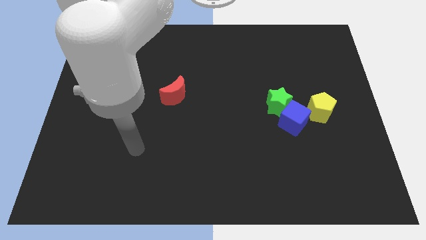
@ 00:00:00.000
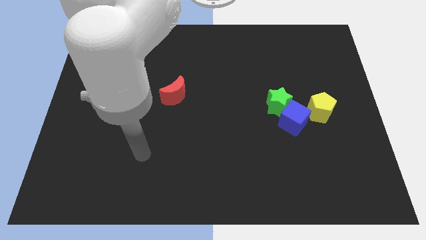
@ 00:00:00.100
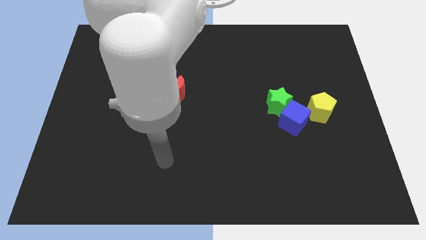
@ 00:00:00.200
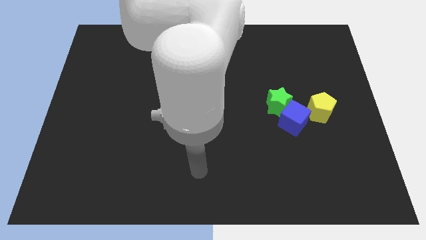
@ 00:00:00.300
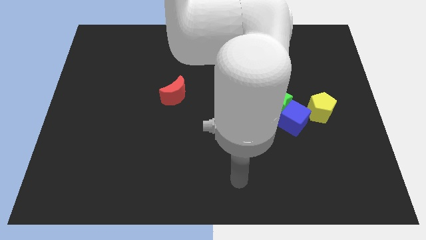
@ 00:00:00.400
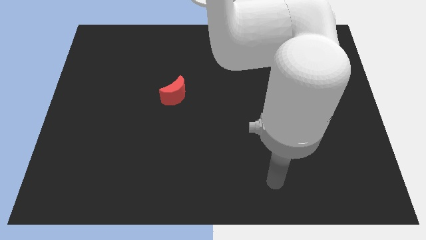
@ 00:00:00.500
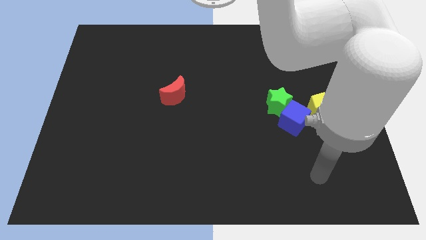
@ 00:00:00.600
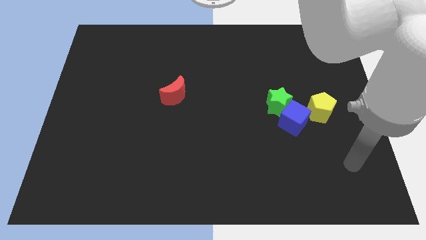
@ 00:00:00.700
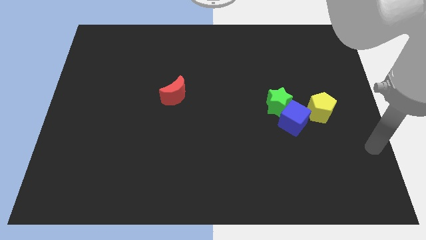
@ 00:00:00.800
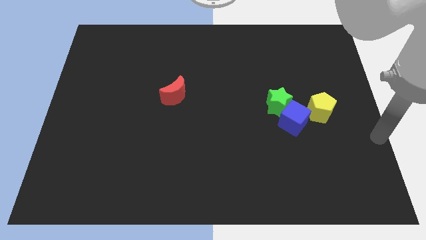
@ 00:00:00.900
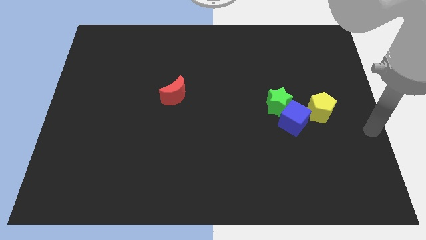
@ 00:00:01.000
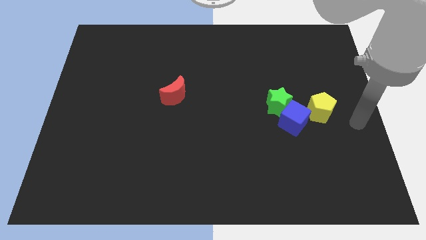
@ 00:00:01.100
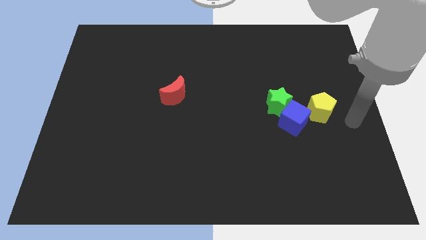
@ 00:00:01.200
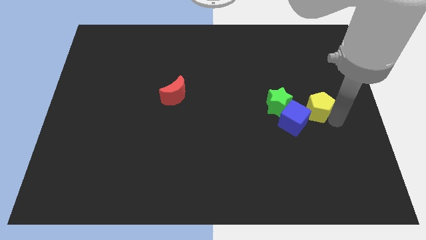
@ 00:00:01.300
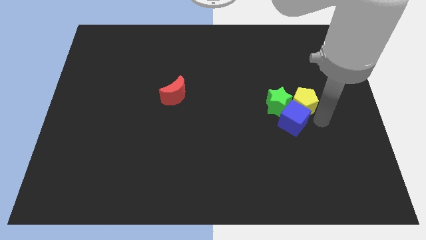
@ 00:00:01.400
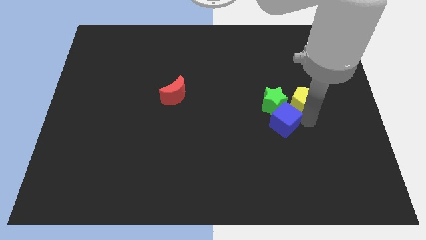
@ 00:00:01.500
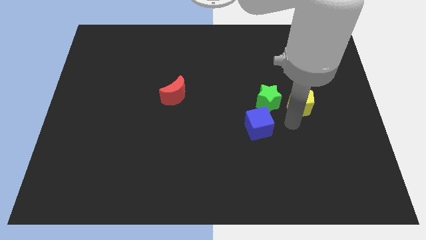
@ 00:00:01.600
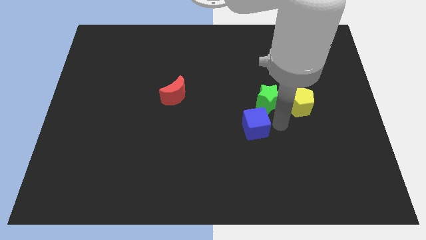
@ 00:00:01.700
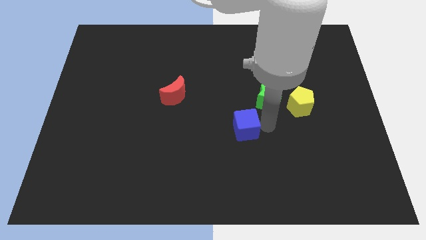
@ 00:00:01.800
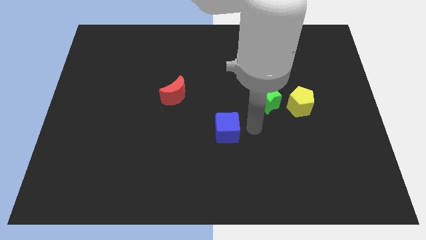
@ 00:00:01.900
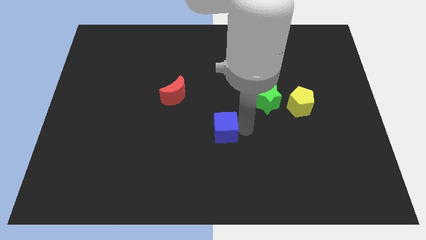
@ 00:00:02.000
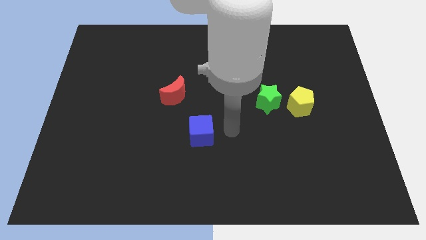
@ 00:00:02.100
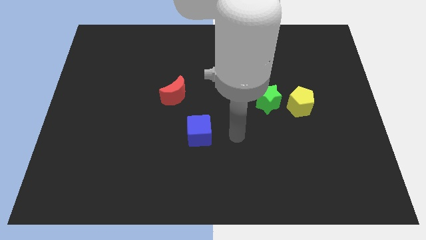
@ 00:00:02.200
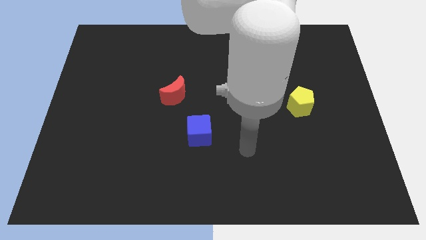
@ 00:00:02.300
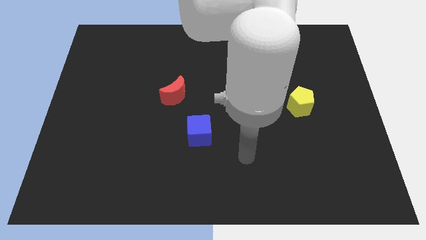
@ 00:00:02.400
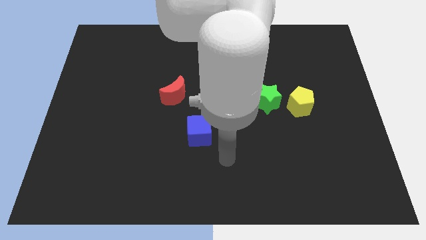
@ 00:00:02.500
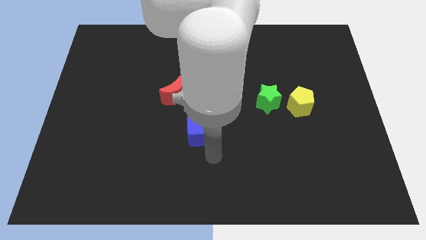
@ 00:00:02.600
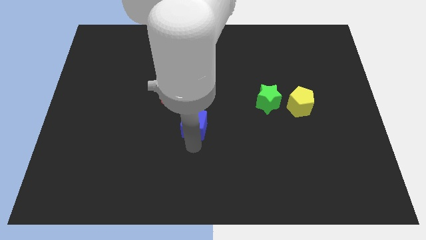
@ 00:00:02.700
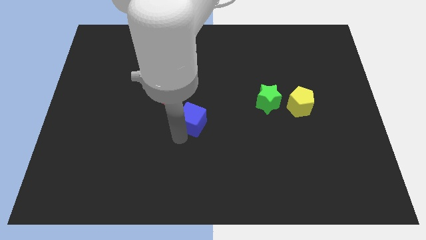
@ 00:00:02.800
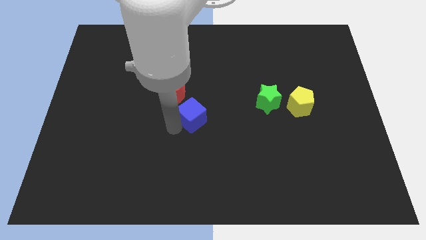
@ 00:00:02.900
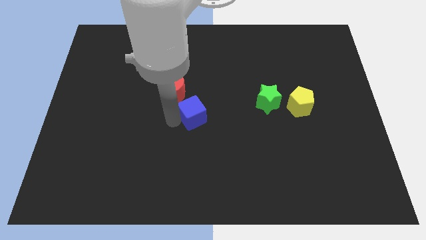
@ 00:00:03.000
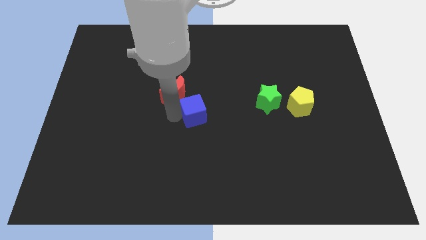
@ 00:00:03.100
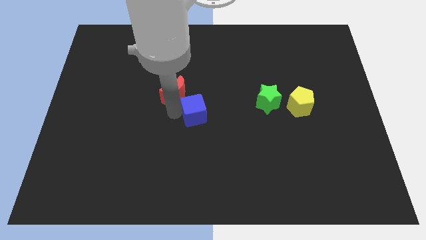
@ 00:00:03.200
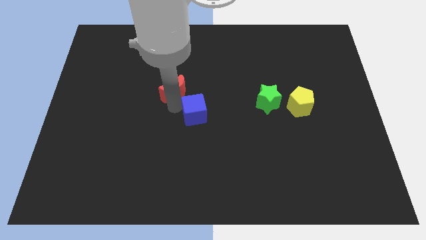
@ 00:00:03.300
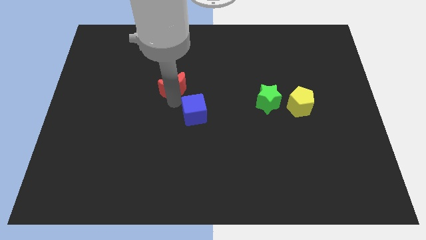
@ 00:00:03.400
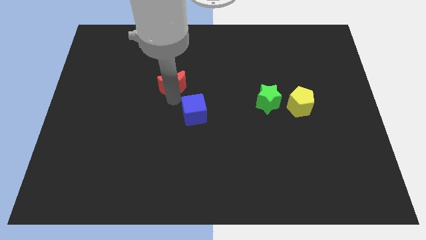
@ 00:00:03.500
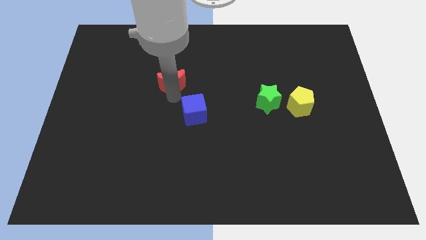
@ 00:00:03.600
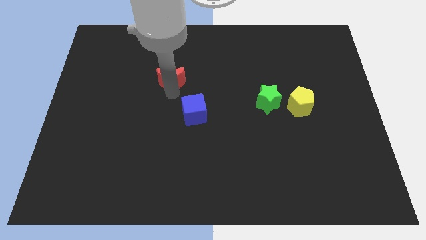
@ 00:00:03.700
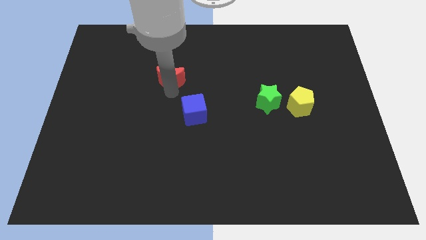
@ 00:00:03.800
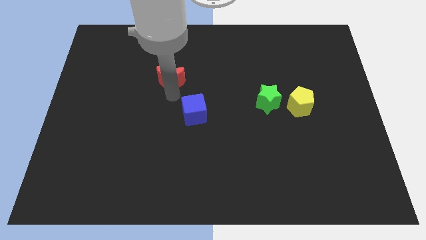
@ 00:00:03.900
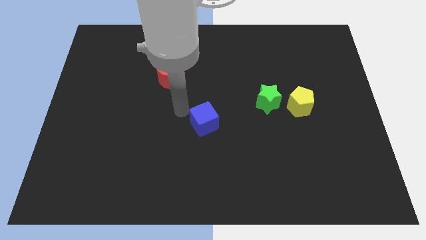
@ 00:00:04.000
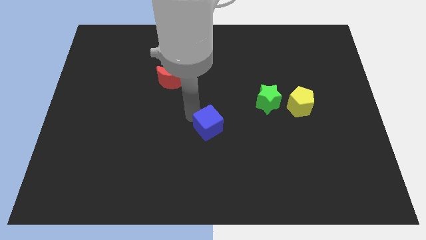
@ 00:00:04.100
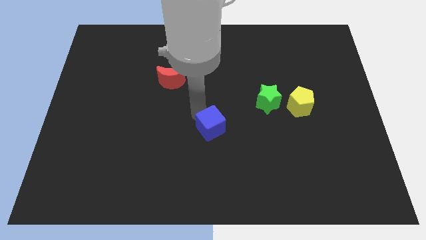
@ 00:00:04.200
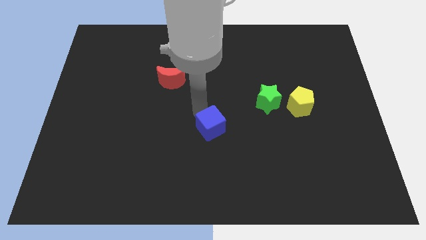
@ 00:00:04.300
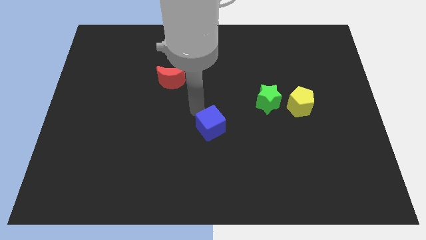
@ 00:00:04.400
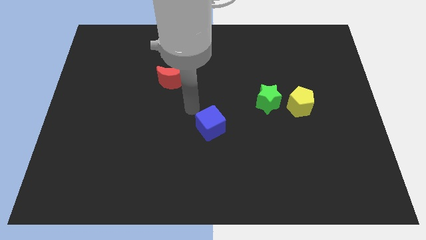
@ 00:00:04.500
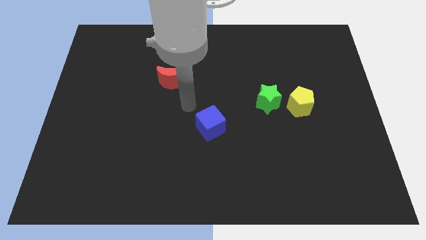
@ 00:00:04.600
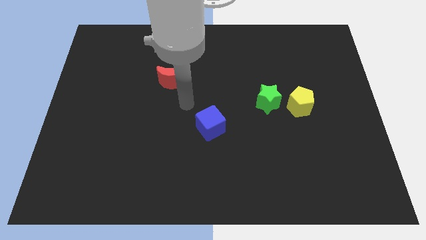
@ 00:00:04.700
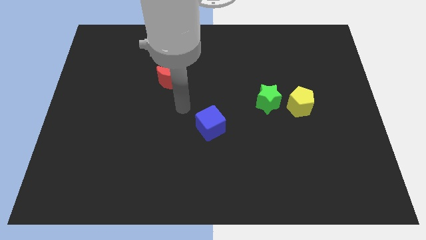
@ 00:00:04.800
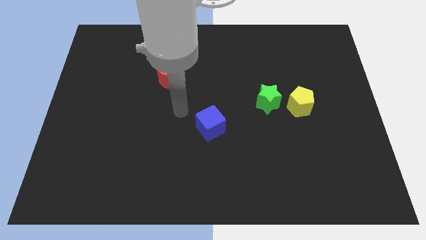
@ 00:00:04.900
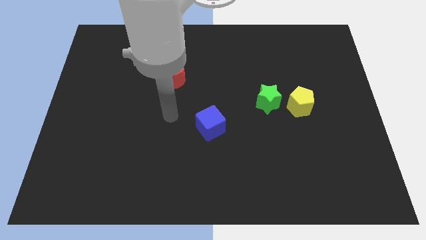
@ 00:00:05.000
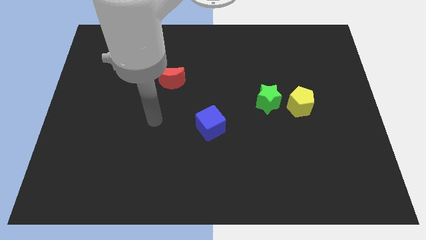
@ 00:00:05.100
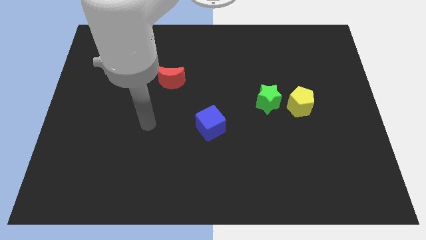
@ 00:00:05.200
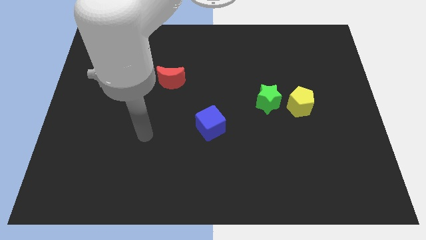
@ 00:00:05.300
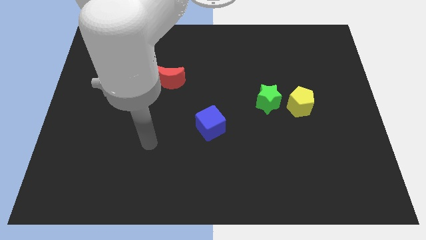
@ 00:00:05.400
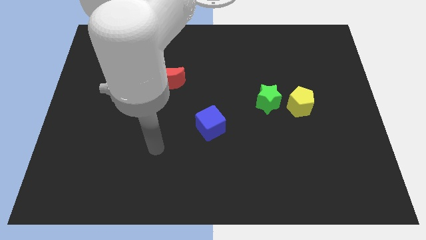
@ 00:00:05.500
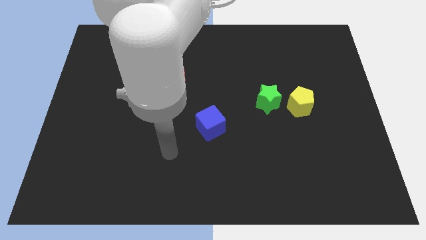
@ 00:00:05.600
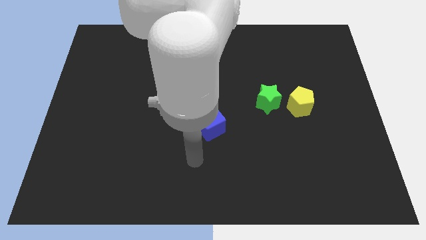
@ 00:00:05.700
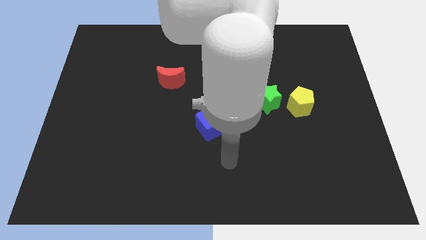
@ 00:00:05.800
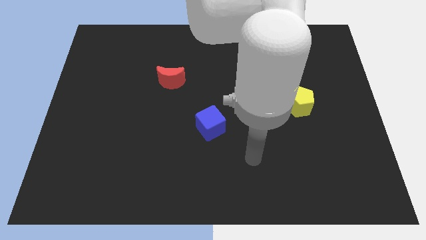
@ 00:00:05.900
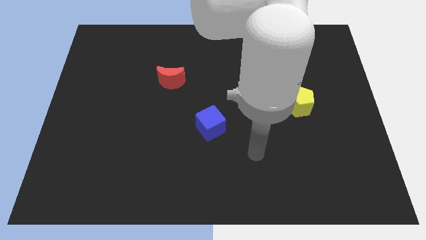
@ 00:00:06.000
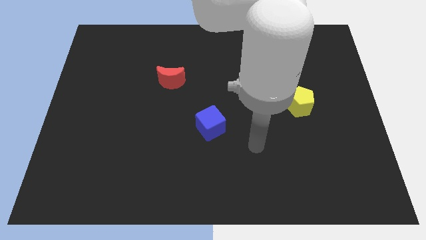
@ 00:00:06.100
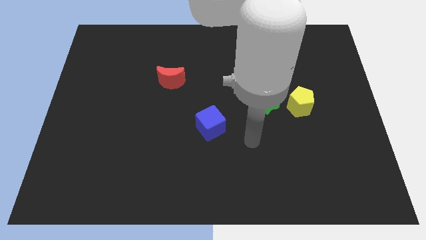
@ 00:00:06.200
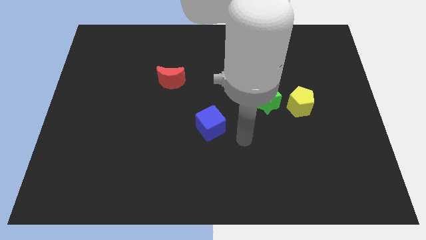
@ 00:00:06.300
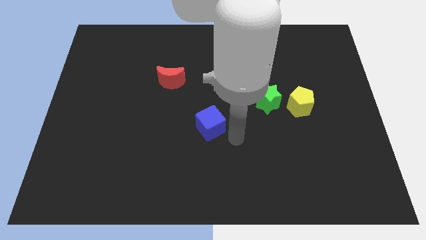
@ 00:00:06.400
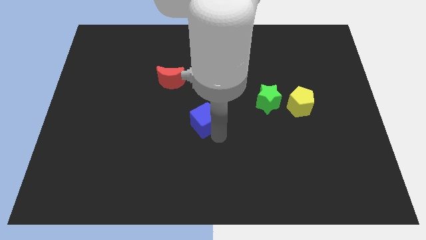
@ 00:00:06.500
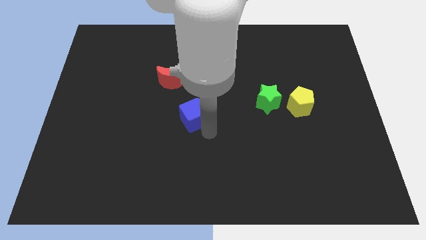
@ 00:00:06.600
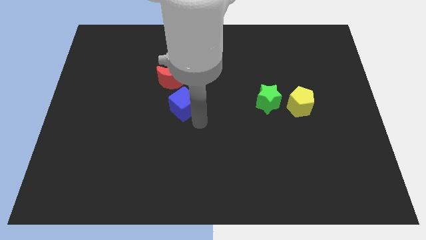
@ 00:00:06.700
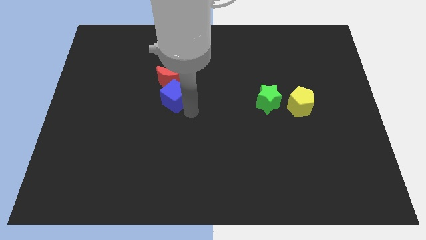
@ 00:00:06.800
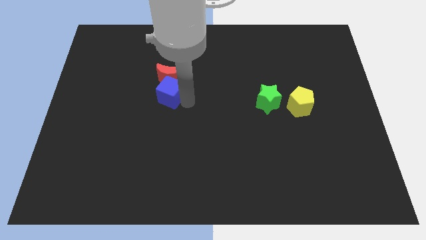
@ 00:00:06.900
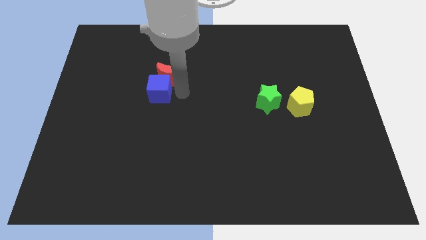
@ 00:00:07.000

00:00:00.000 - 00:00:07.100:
slide the blue cube next to the red moon

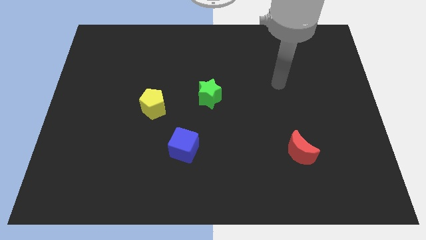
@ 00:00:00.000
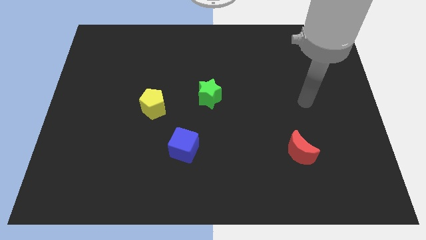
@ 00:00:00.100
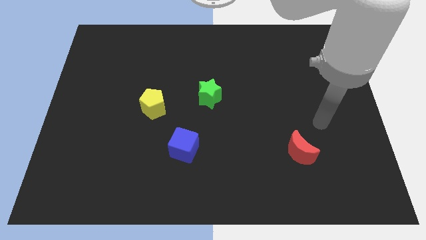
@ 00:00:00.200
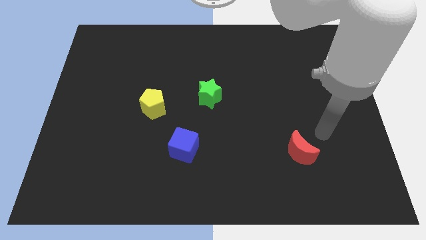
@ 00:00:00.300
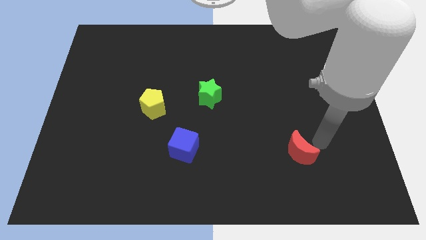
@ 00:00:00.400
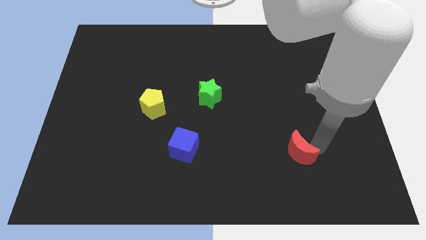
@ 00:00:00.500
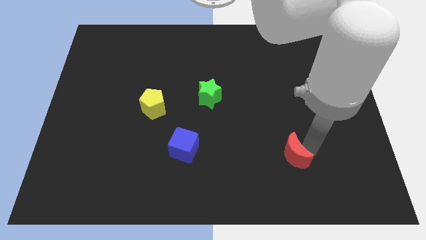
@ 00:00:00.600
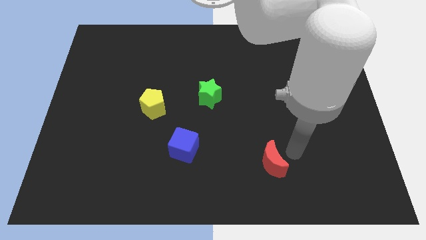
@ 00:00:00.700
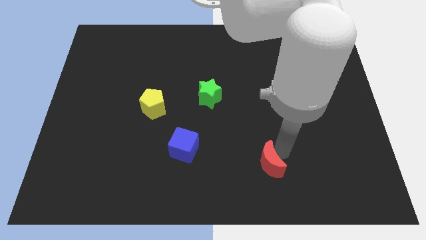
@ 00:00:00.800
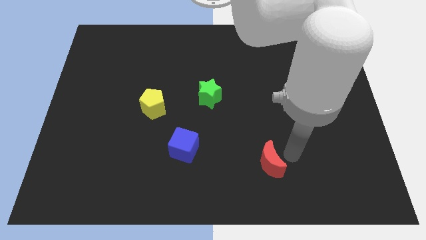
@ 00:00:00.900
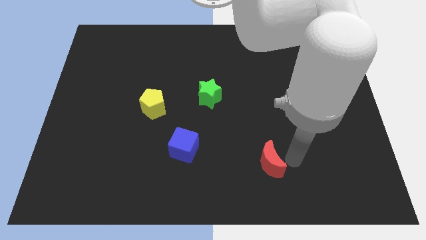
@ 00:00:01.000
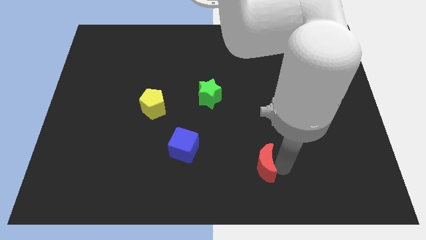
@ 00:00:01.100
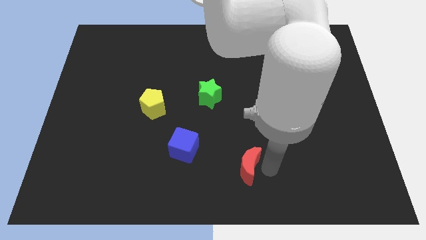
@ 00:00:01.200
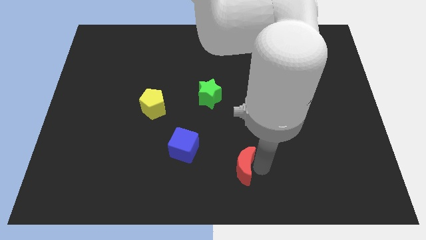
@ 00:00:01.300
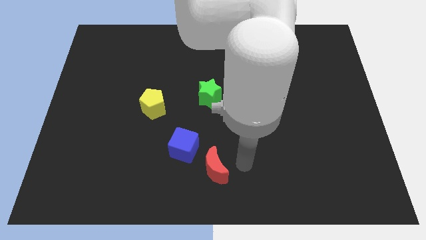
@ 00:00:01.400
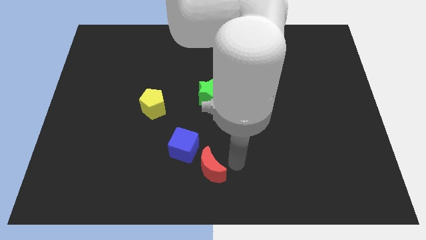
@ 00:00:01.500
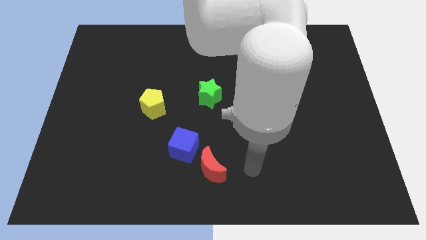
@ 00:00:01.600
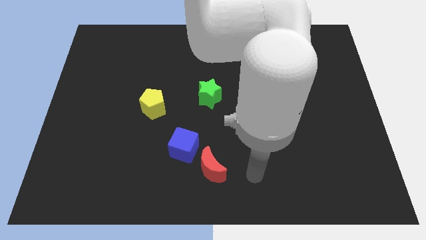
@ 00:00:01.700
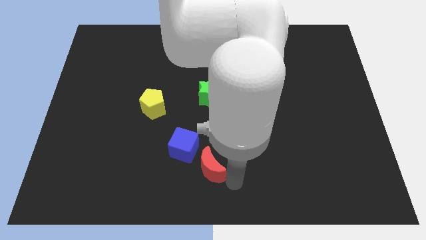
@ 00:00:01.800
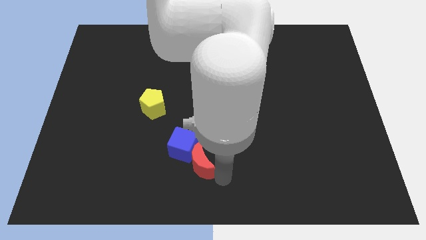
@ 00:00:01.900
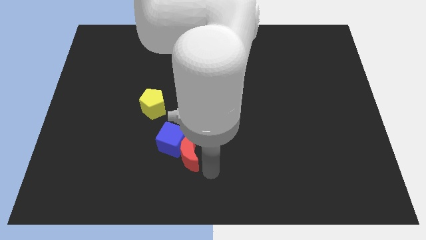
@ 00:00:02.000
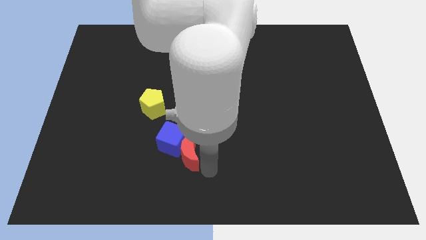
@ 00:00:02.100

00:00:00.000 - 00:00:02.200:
put the moon next to the blue block
